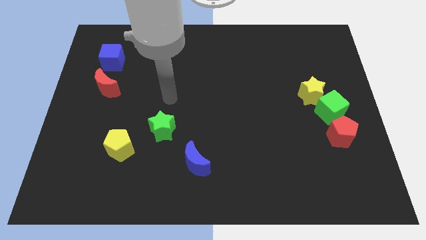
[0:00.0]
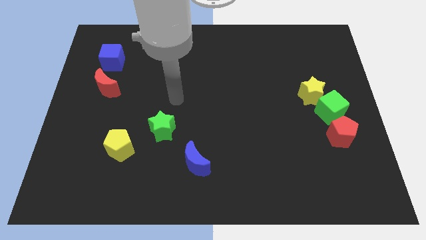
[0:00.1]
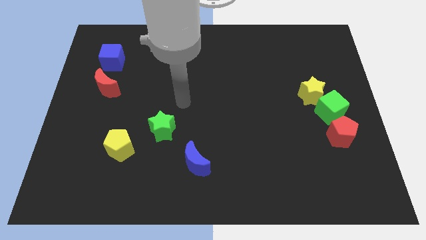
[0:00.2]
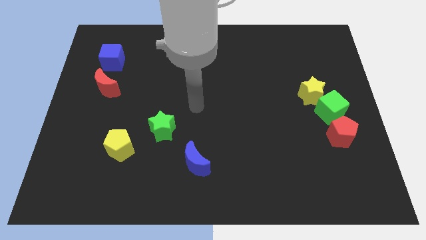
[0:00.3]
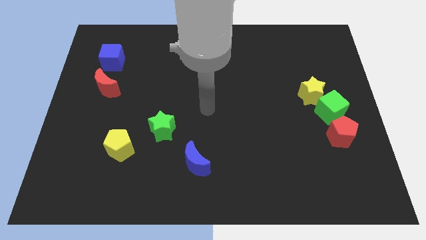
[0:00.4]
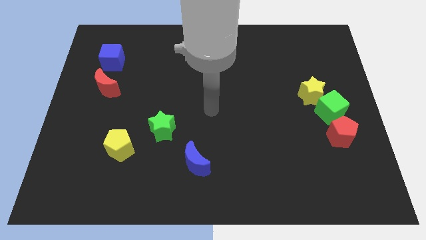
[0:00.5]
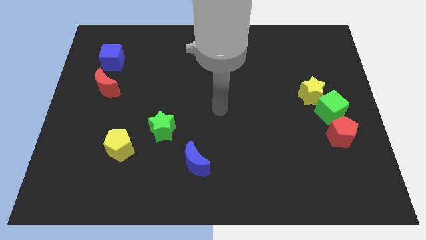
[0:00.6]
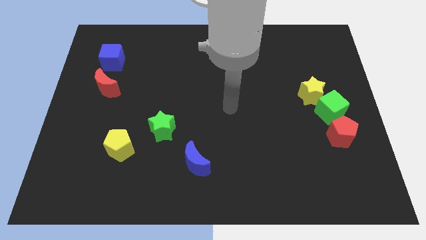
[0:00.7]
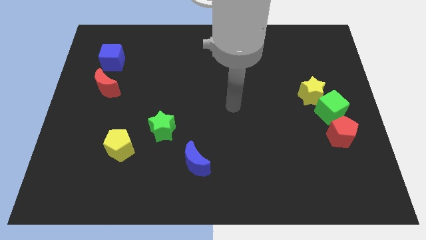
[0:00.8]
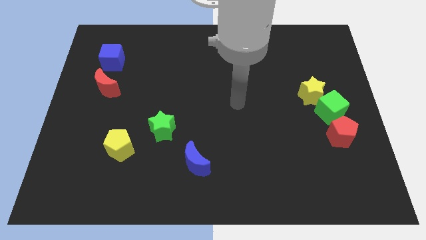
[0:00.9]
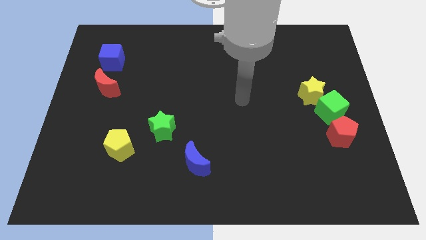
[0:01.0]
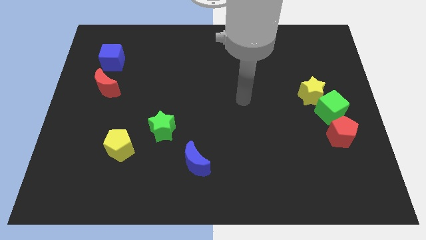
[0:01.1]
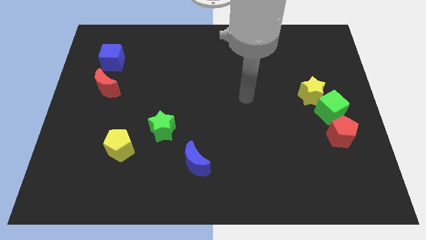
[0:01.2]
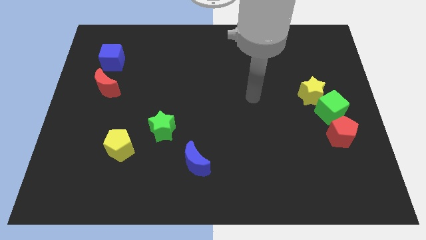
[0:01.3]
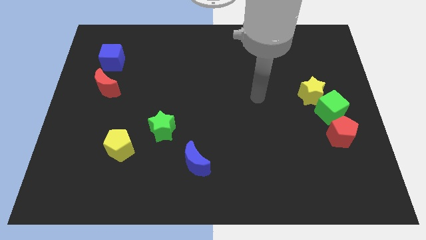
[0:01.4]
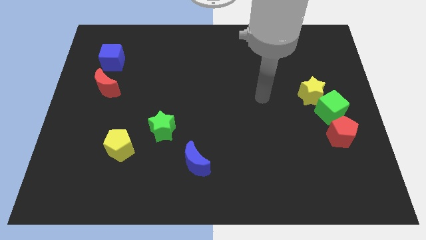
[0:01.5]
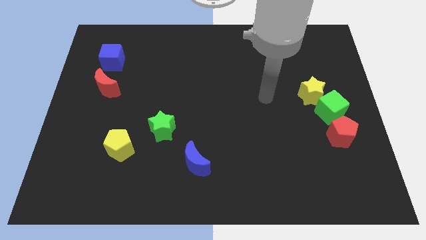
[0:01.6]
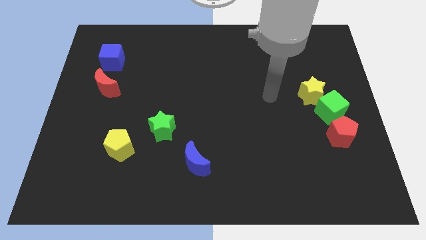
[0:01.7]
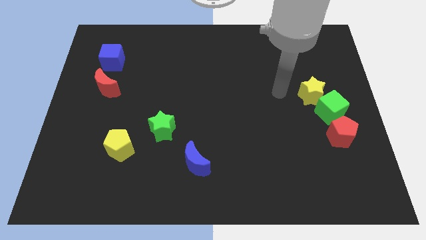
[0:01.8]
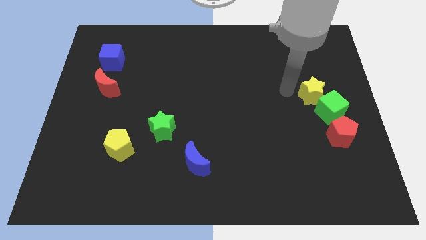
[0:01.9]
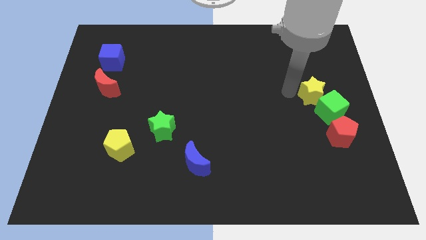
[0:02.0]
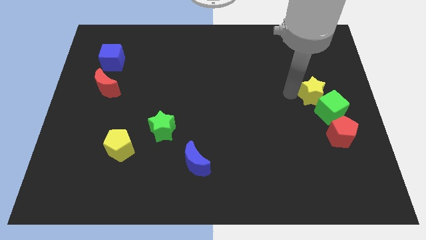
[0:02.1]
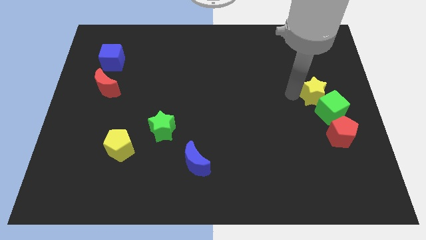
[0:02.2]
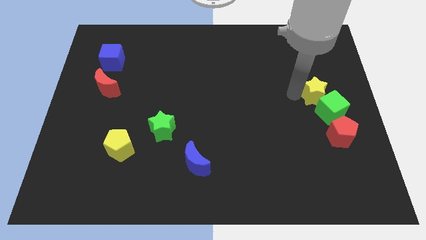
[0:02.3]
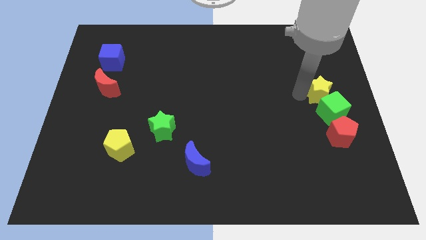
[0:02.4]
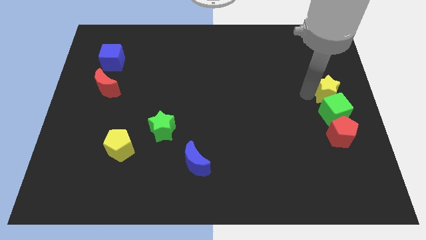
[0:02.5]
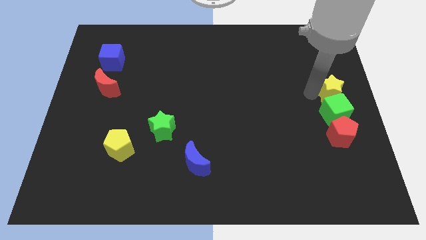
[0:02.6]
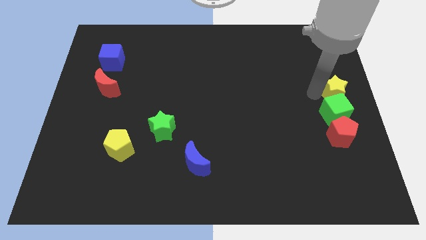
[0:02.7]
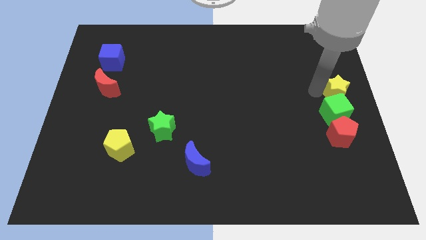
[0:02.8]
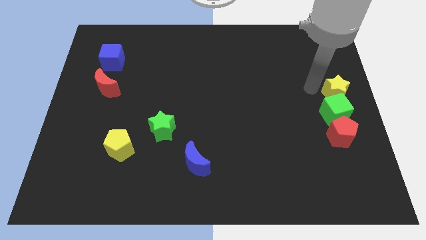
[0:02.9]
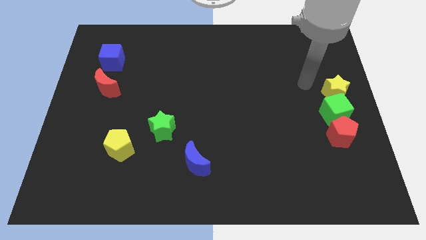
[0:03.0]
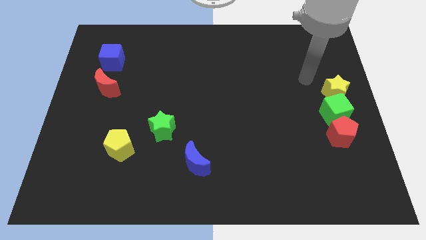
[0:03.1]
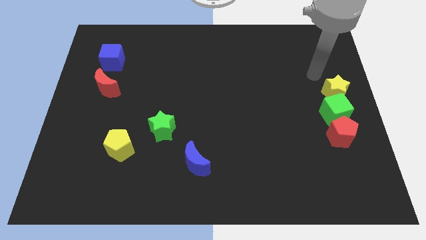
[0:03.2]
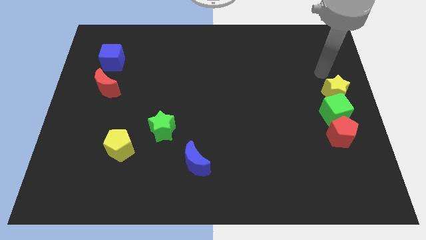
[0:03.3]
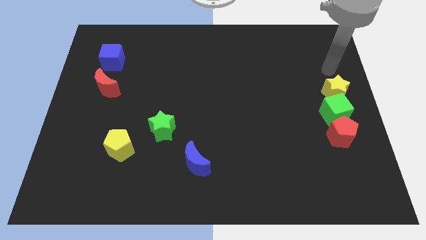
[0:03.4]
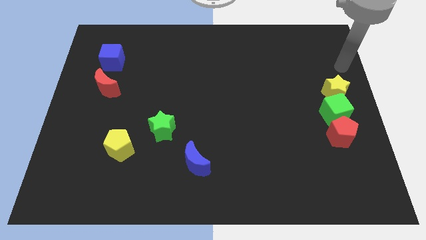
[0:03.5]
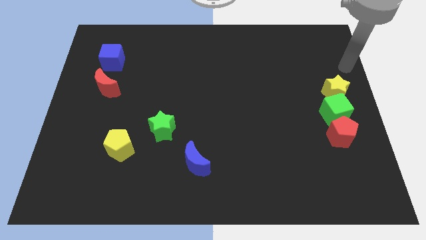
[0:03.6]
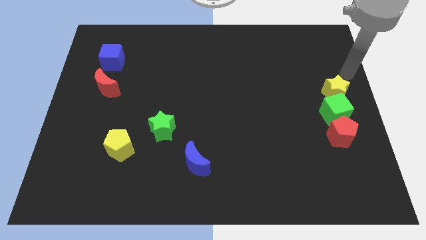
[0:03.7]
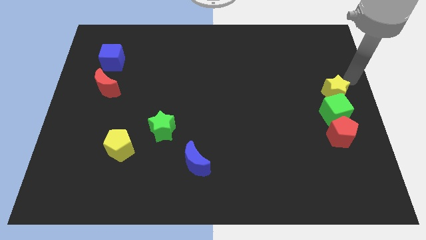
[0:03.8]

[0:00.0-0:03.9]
push the yellow star slightly to the right side of the board

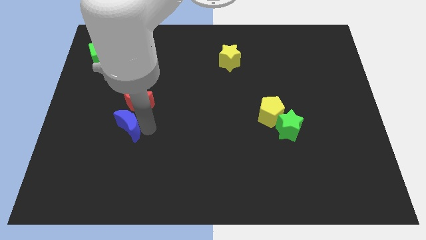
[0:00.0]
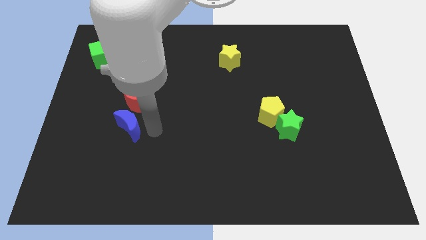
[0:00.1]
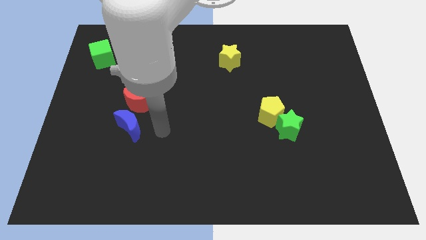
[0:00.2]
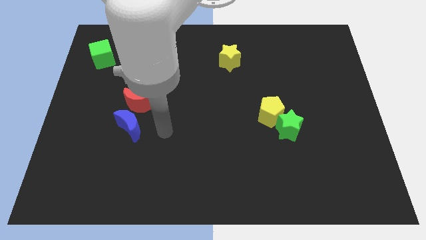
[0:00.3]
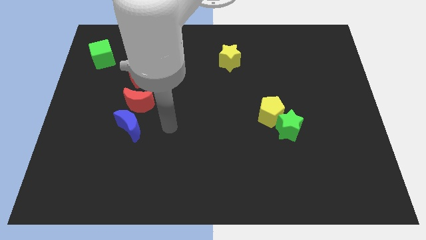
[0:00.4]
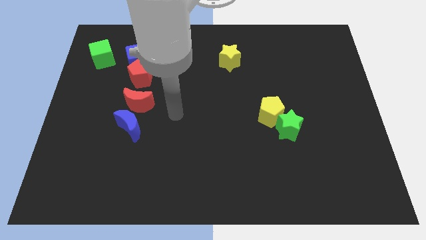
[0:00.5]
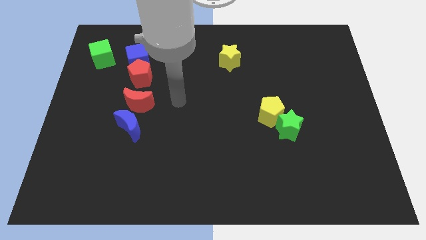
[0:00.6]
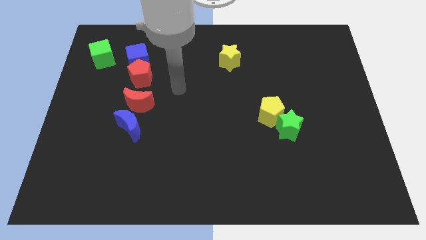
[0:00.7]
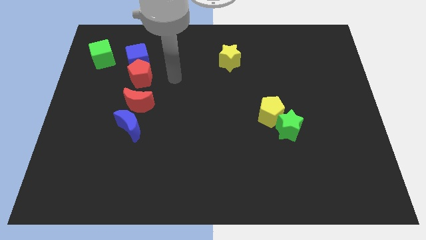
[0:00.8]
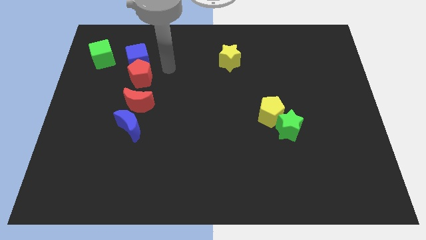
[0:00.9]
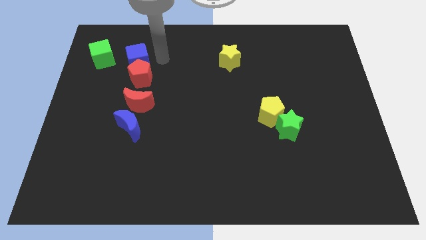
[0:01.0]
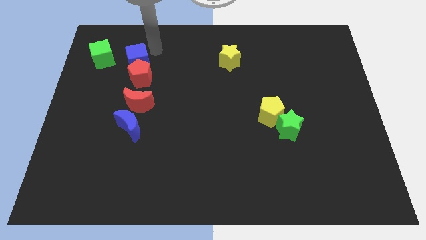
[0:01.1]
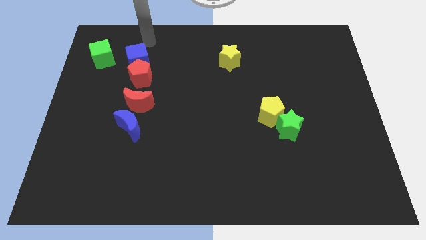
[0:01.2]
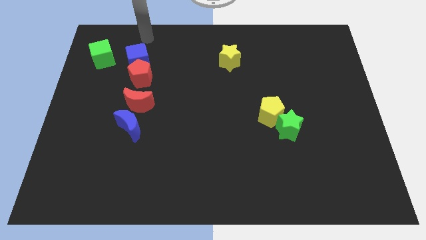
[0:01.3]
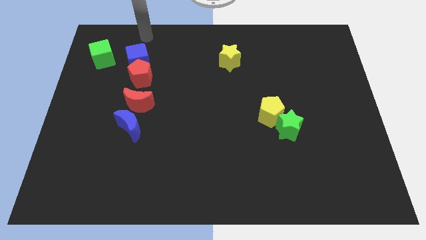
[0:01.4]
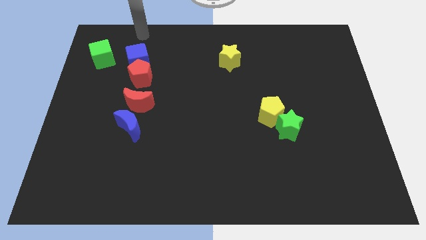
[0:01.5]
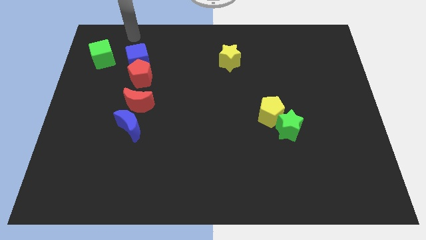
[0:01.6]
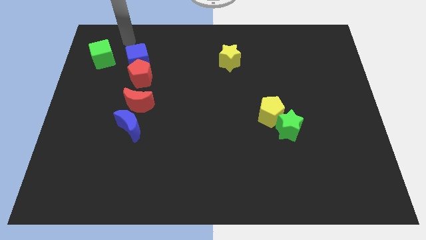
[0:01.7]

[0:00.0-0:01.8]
move the arm on top of the blue cube

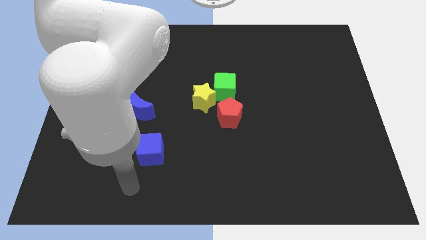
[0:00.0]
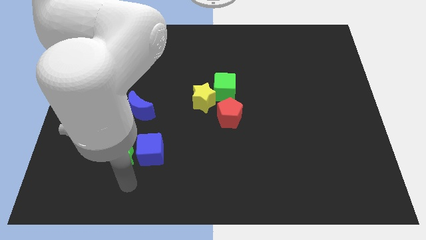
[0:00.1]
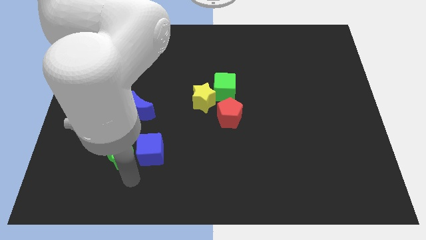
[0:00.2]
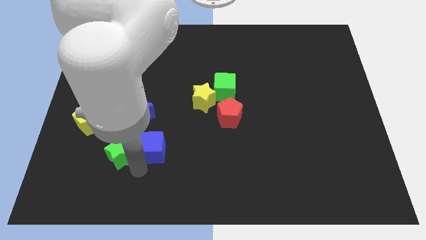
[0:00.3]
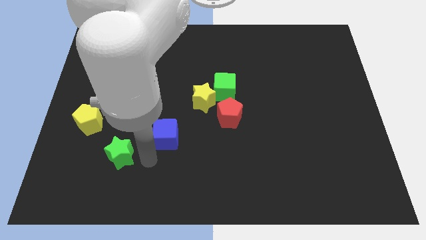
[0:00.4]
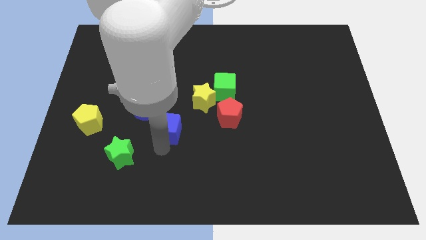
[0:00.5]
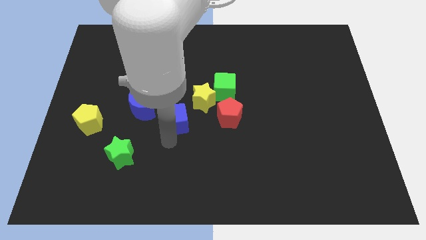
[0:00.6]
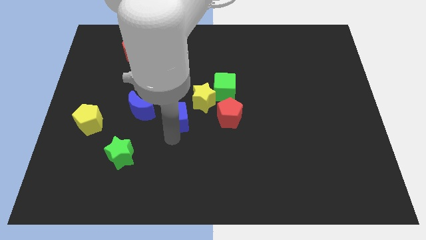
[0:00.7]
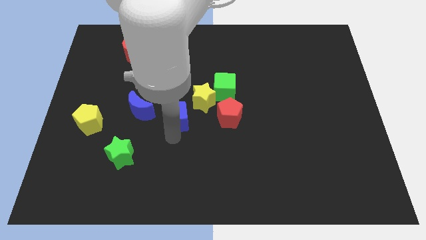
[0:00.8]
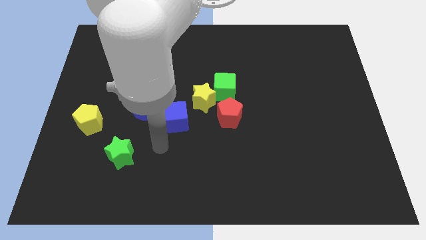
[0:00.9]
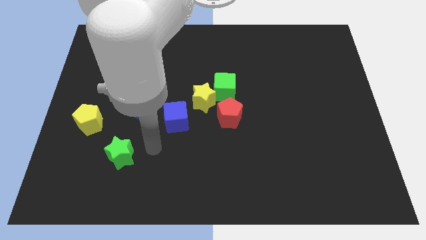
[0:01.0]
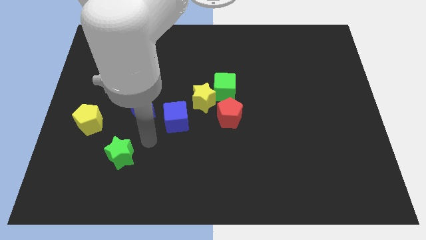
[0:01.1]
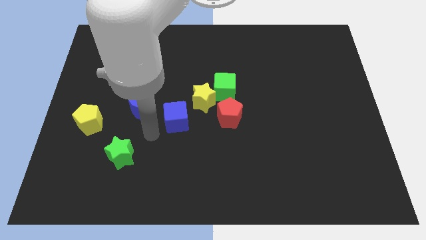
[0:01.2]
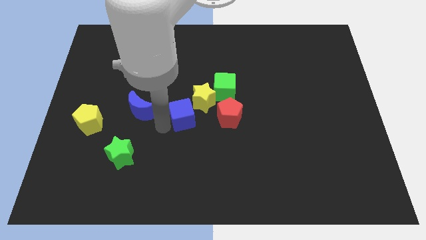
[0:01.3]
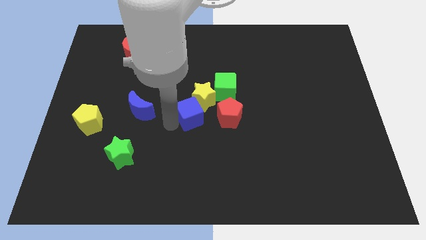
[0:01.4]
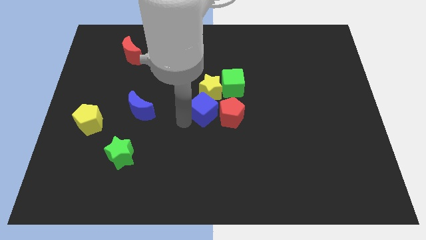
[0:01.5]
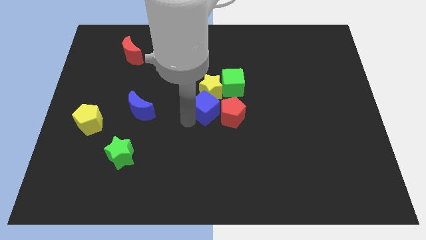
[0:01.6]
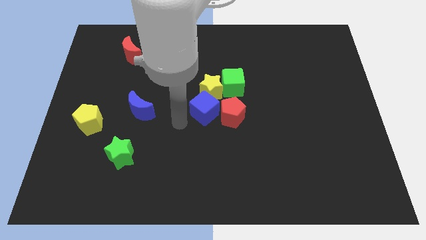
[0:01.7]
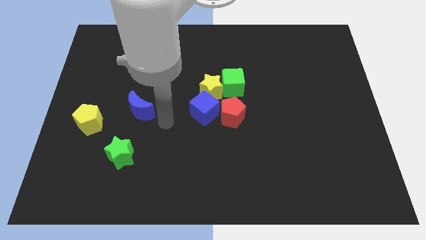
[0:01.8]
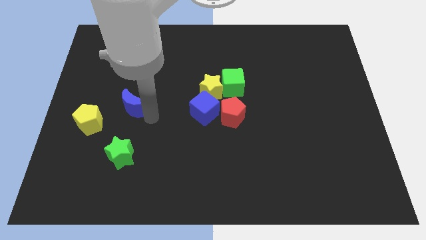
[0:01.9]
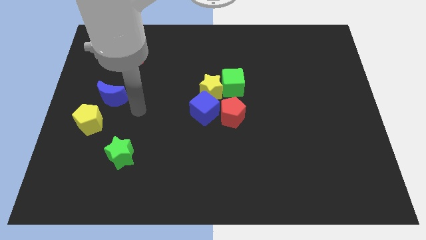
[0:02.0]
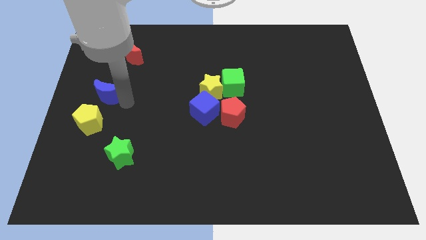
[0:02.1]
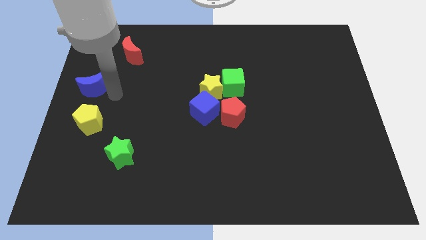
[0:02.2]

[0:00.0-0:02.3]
move the blue cube into the yellow star

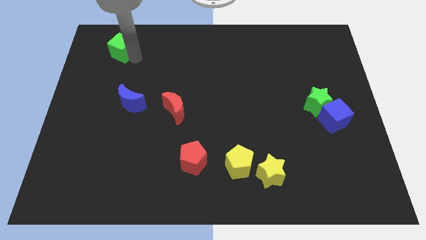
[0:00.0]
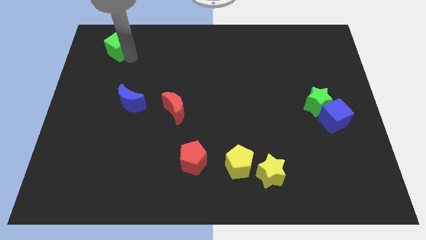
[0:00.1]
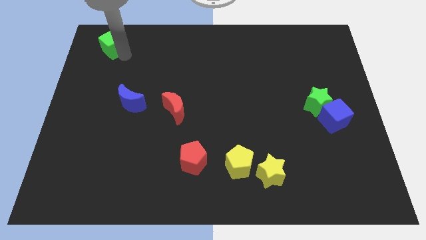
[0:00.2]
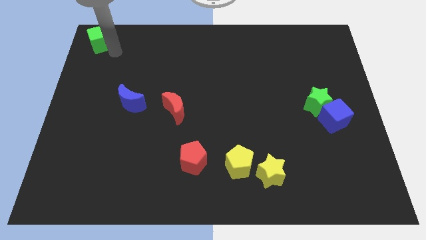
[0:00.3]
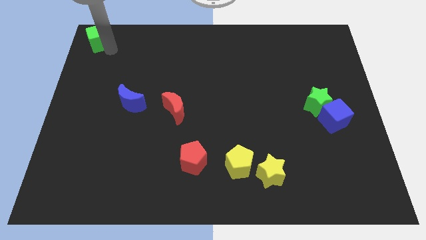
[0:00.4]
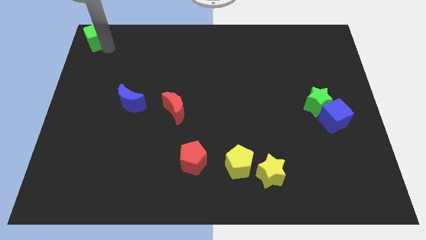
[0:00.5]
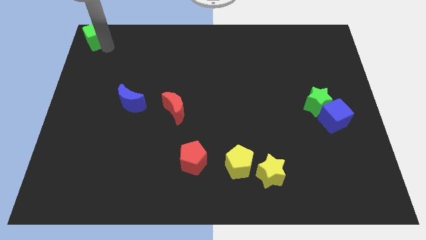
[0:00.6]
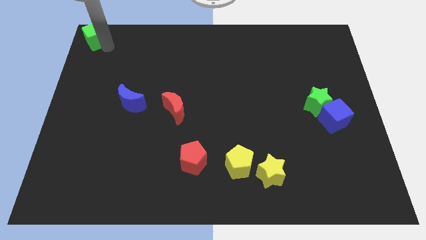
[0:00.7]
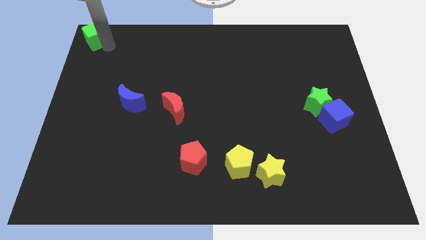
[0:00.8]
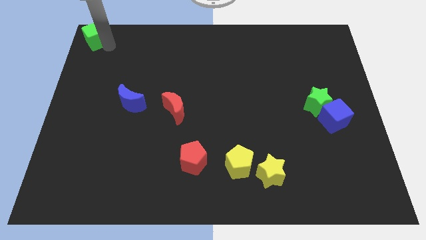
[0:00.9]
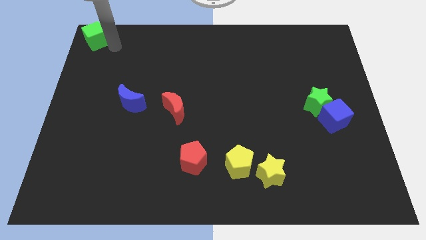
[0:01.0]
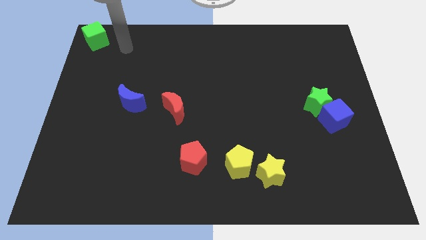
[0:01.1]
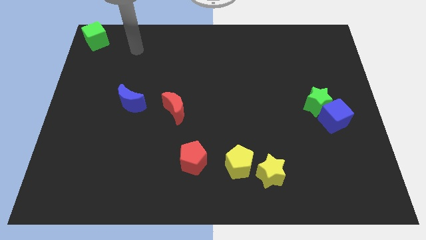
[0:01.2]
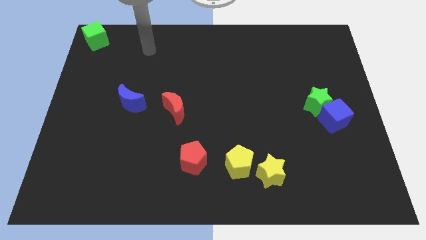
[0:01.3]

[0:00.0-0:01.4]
move the green cube towards the top left side of the board
